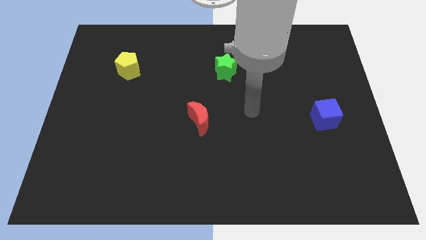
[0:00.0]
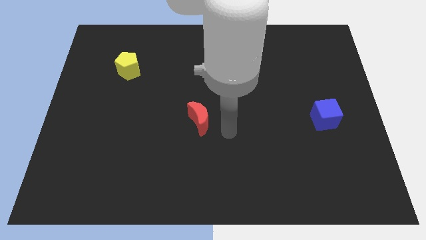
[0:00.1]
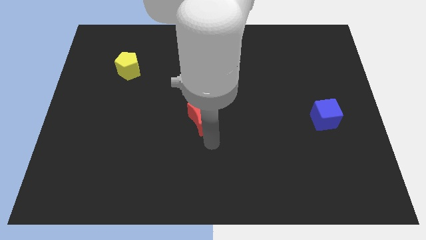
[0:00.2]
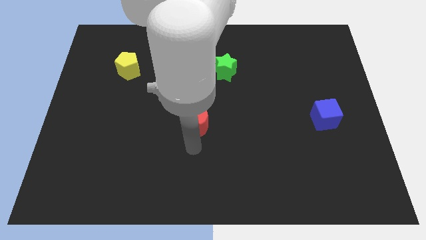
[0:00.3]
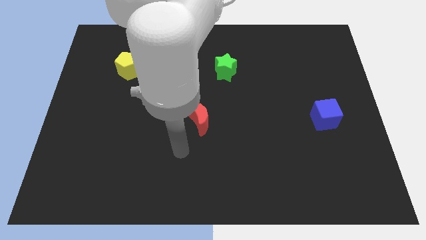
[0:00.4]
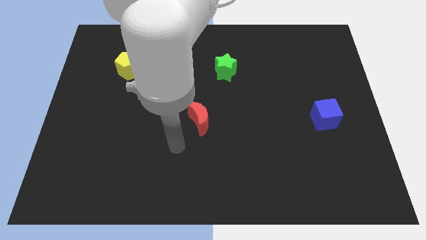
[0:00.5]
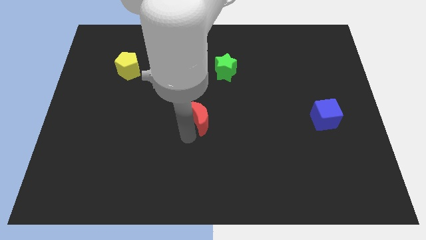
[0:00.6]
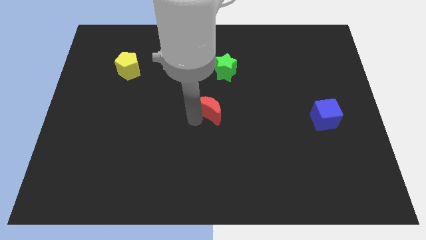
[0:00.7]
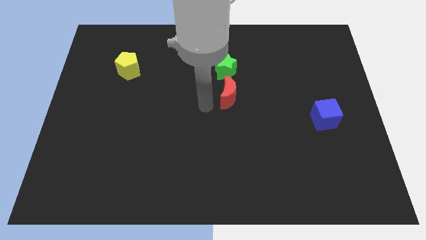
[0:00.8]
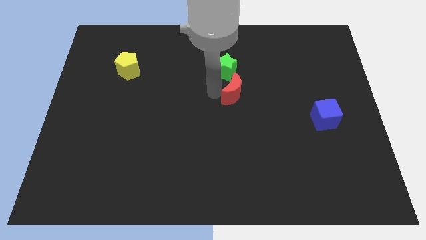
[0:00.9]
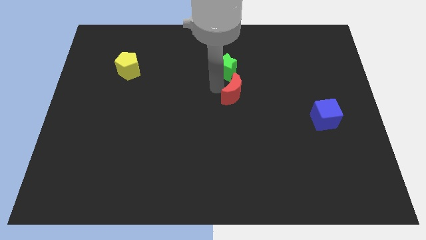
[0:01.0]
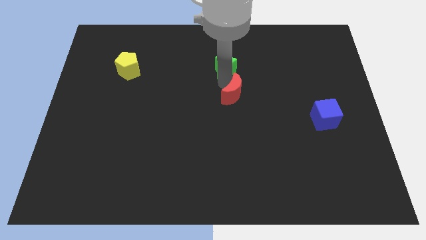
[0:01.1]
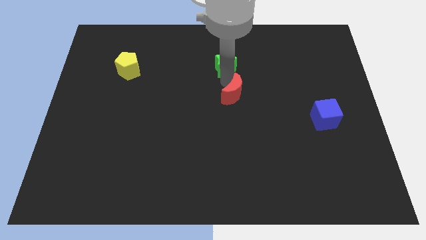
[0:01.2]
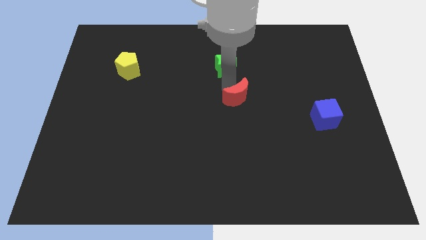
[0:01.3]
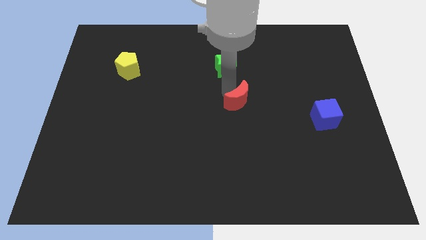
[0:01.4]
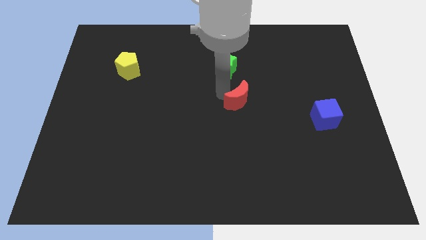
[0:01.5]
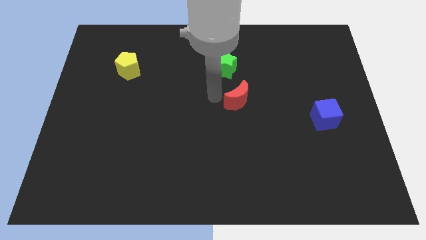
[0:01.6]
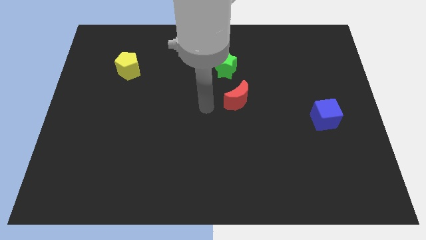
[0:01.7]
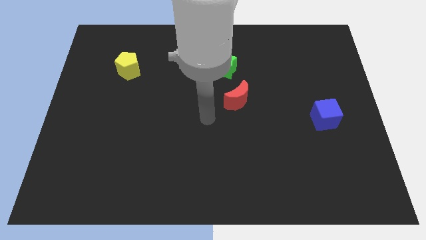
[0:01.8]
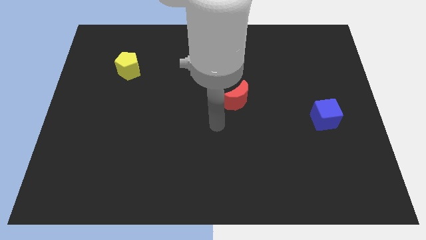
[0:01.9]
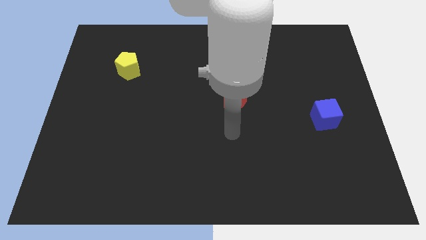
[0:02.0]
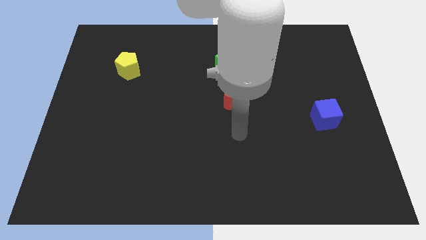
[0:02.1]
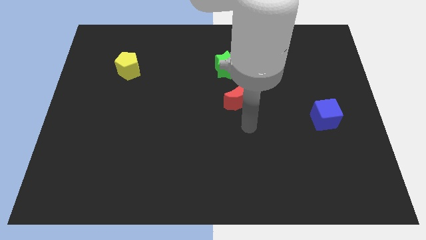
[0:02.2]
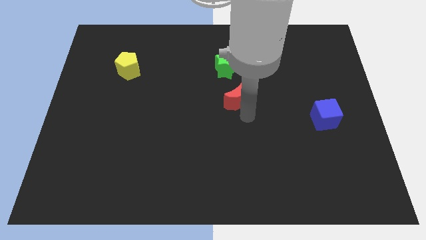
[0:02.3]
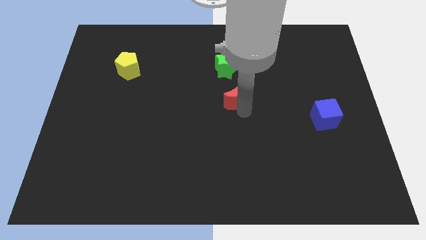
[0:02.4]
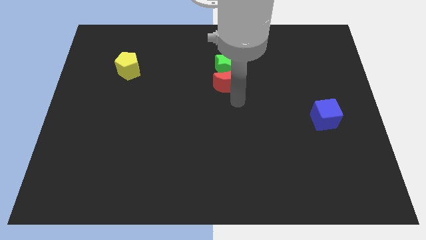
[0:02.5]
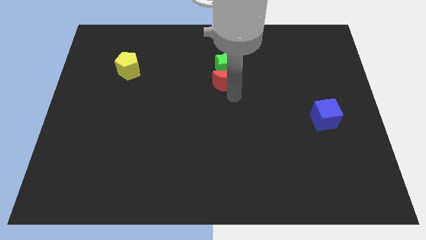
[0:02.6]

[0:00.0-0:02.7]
push the moon towards the green block

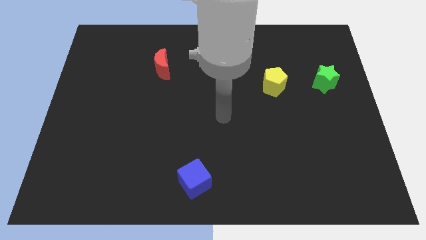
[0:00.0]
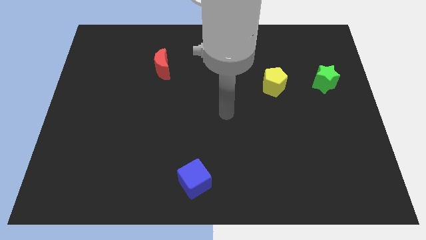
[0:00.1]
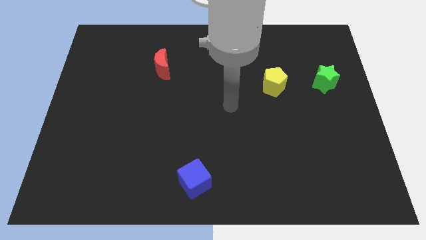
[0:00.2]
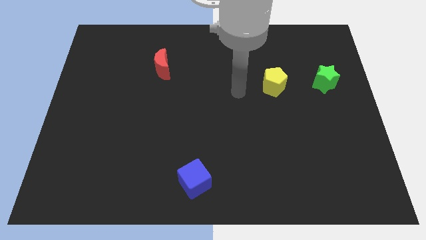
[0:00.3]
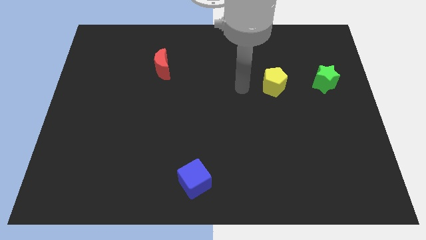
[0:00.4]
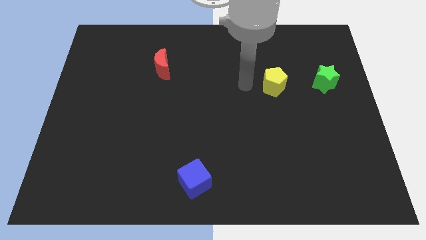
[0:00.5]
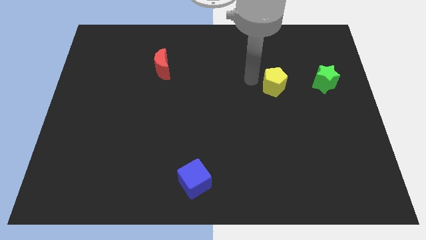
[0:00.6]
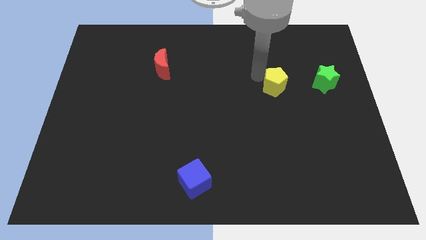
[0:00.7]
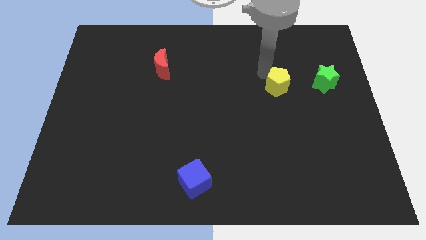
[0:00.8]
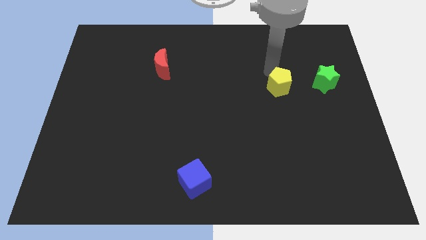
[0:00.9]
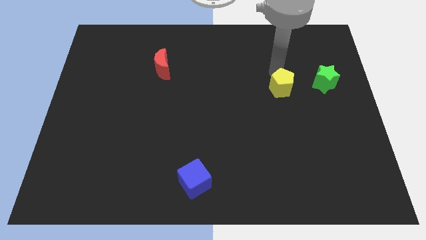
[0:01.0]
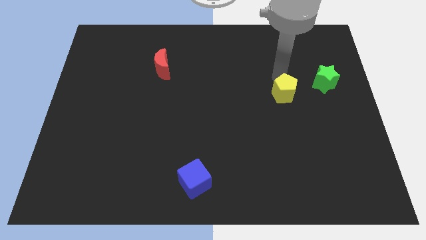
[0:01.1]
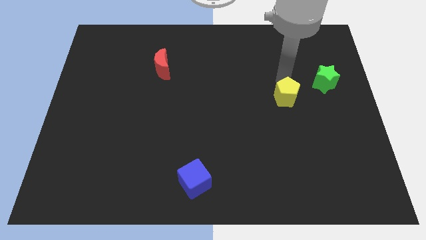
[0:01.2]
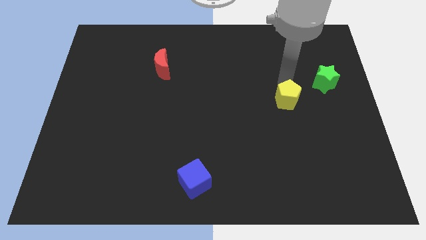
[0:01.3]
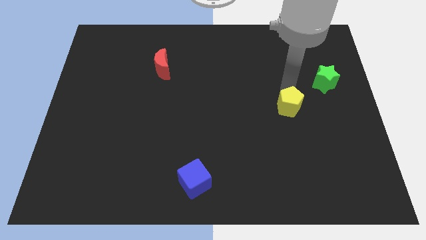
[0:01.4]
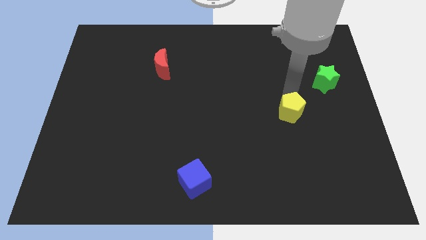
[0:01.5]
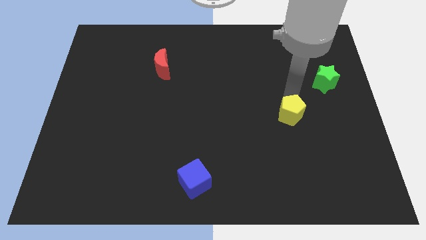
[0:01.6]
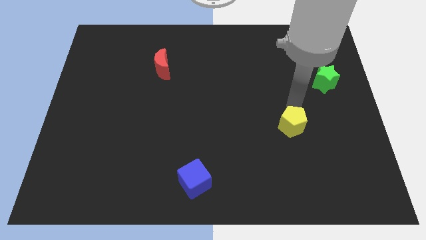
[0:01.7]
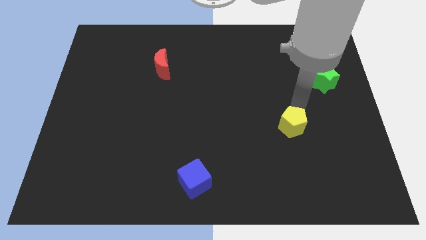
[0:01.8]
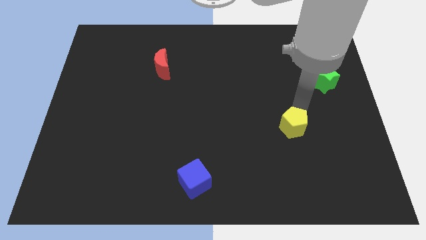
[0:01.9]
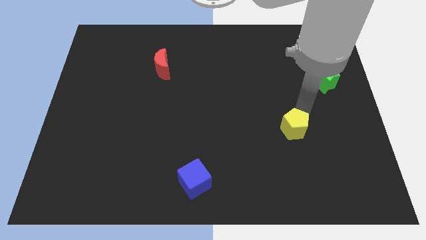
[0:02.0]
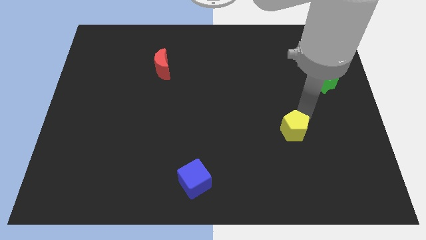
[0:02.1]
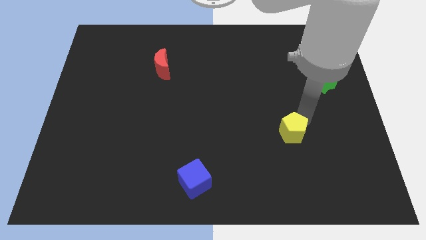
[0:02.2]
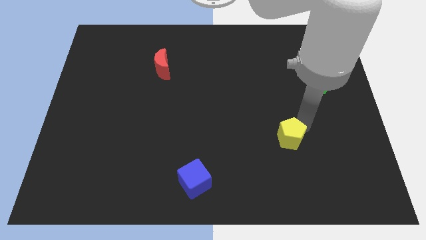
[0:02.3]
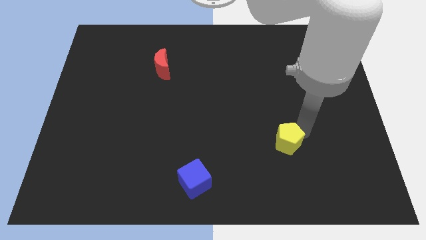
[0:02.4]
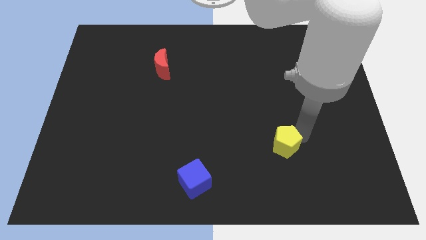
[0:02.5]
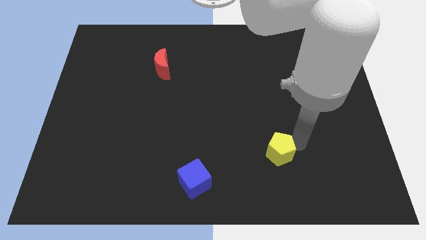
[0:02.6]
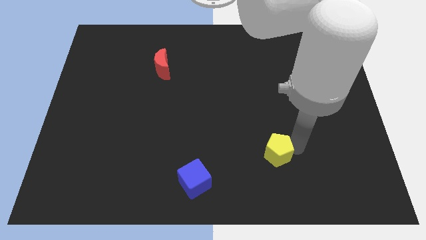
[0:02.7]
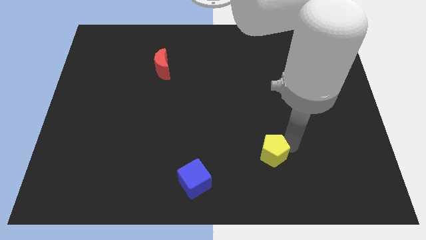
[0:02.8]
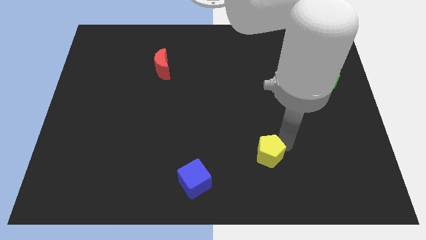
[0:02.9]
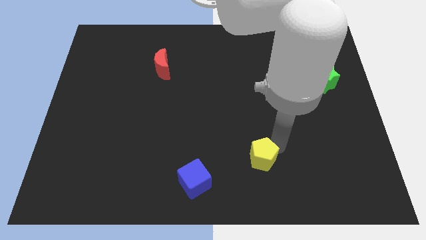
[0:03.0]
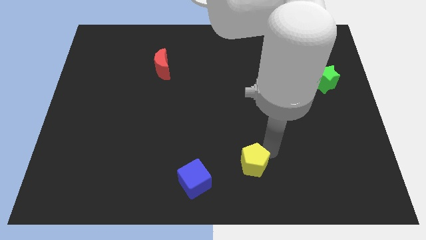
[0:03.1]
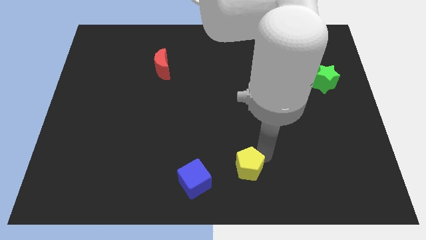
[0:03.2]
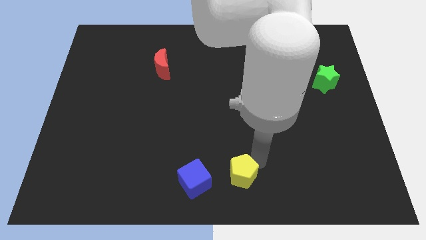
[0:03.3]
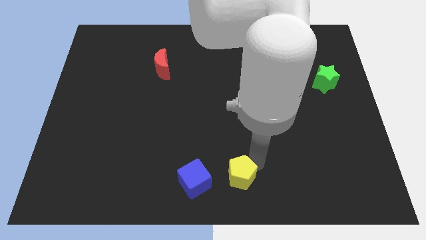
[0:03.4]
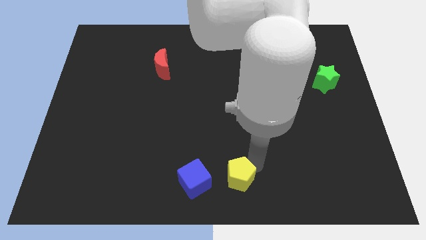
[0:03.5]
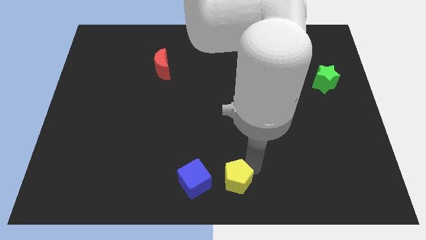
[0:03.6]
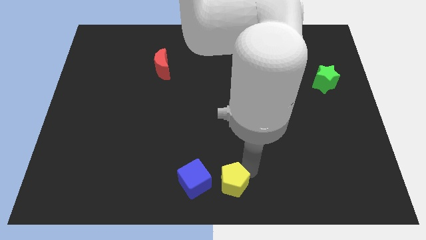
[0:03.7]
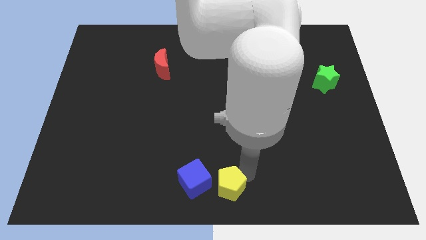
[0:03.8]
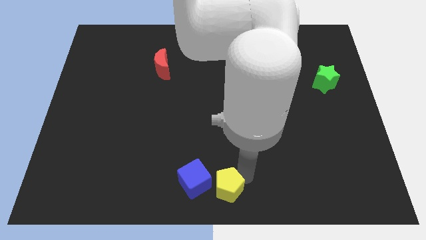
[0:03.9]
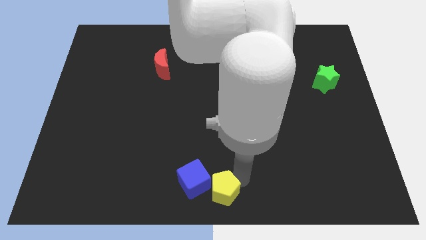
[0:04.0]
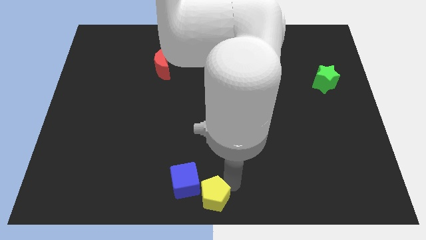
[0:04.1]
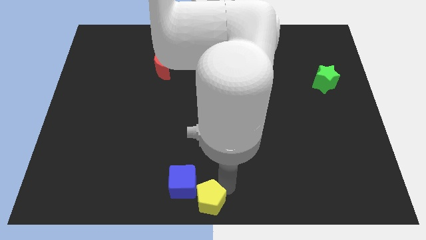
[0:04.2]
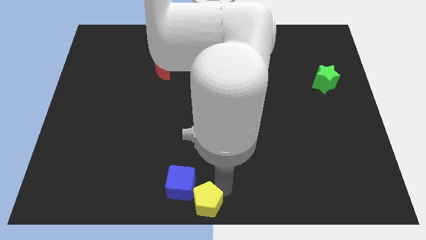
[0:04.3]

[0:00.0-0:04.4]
move the pentagon next to the cube

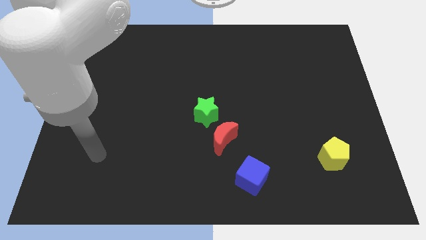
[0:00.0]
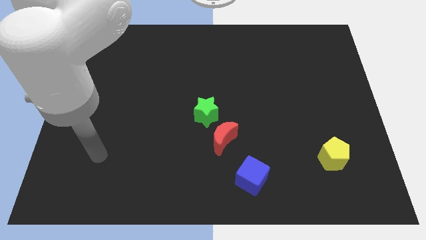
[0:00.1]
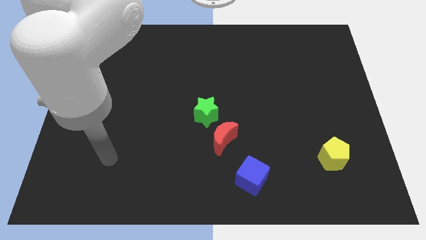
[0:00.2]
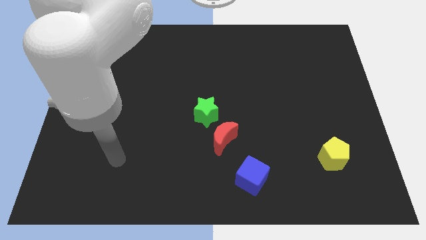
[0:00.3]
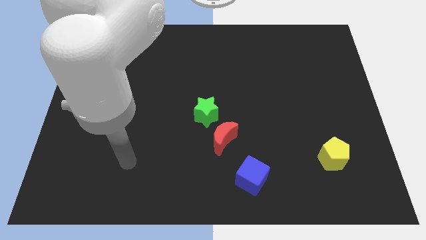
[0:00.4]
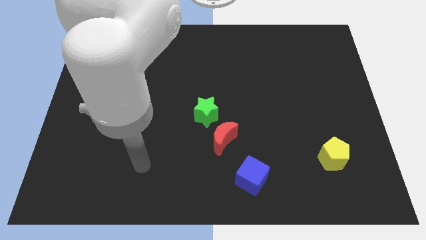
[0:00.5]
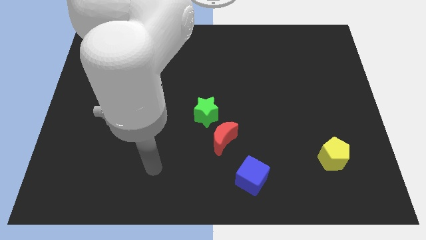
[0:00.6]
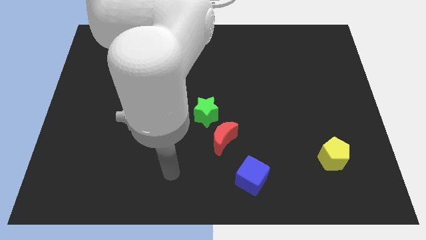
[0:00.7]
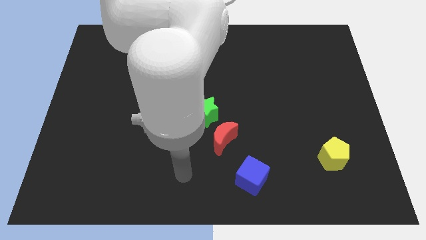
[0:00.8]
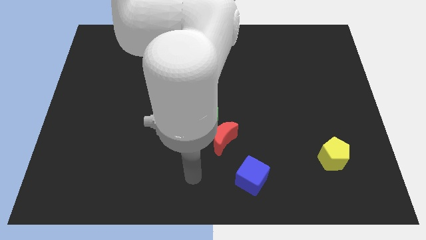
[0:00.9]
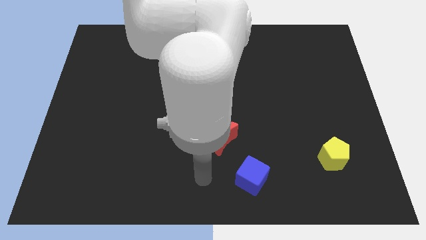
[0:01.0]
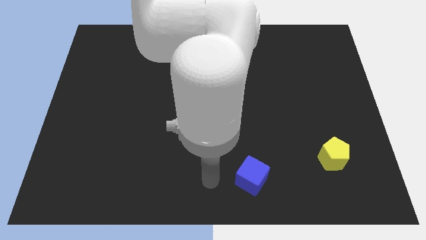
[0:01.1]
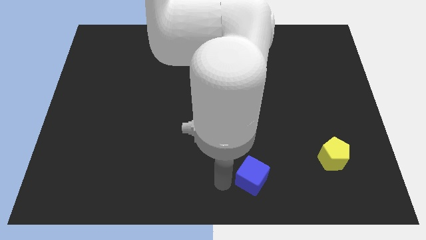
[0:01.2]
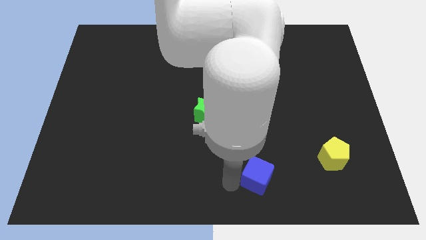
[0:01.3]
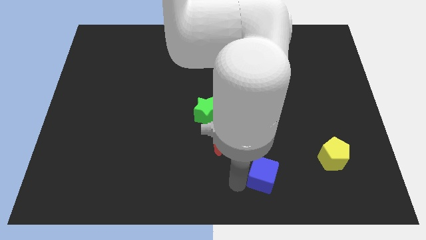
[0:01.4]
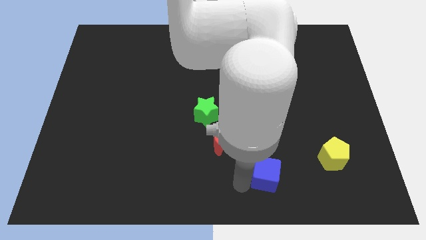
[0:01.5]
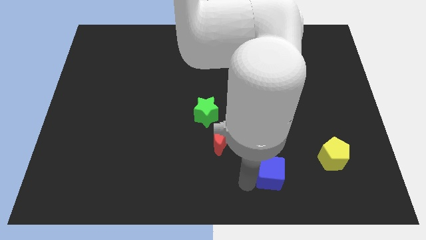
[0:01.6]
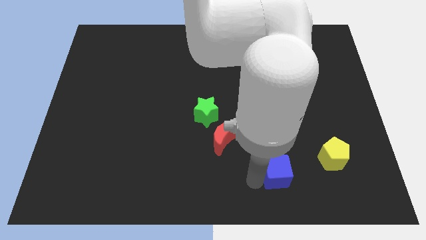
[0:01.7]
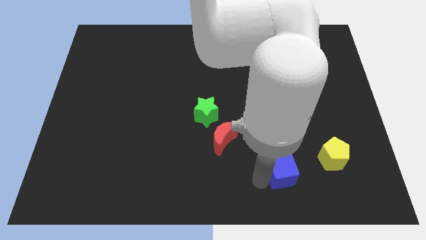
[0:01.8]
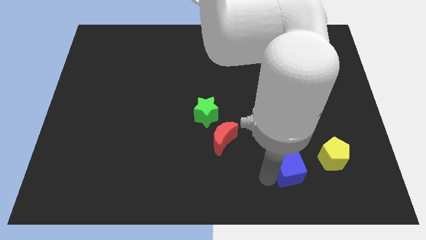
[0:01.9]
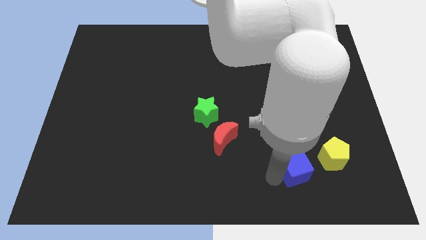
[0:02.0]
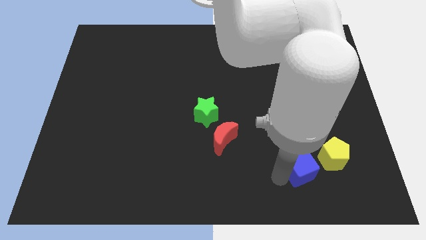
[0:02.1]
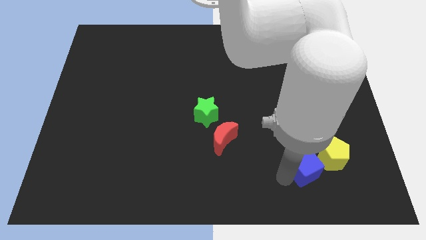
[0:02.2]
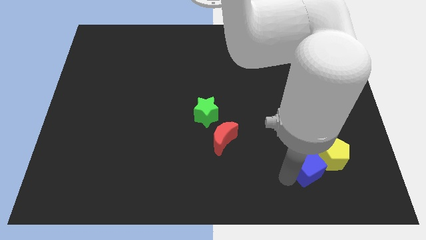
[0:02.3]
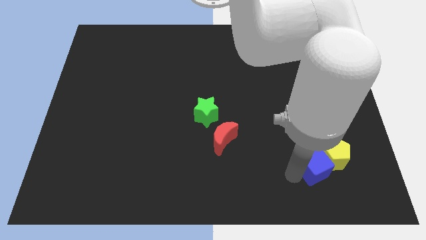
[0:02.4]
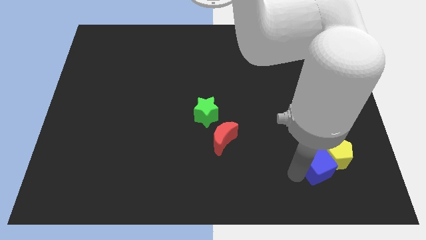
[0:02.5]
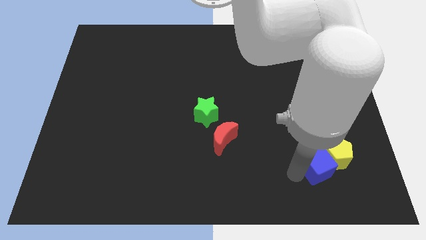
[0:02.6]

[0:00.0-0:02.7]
move the blue cube towards the pentagon
